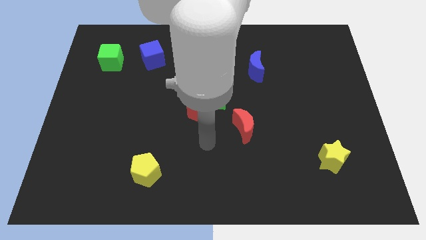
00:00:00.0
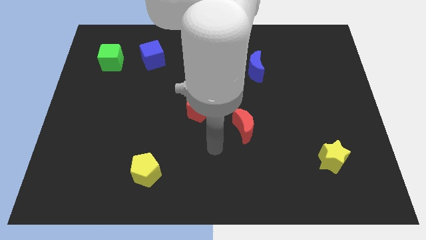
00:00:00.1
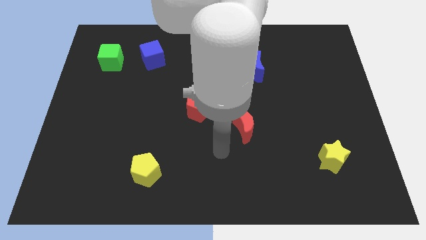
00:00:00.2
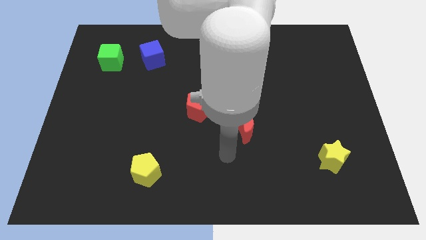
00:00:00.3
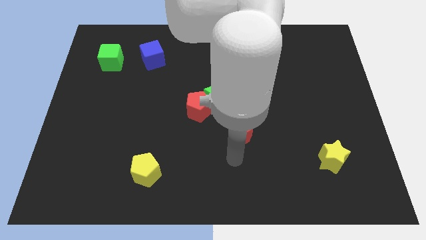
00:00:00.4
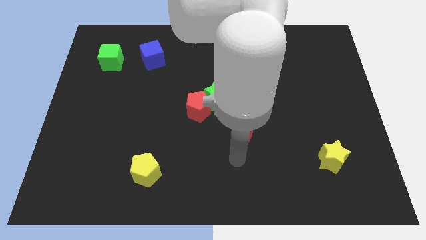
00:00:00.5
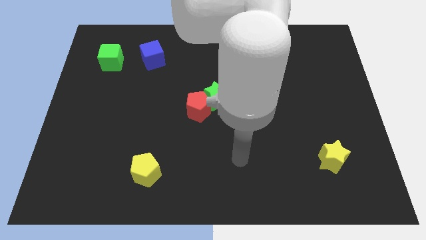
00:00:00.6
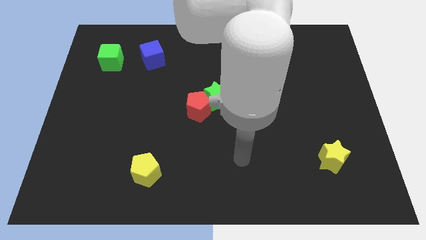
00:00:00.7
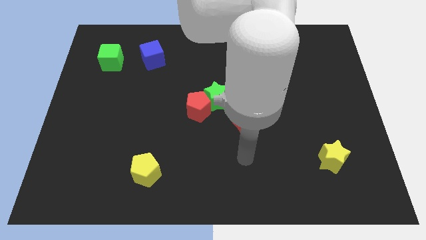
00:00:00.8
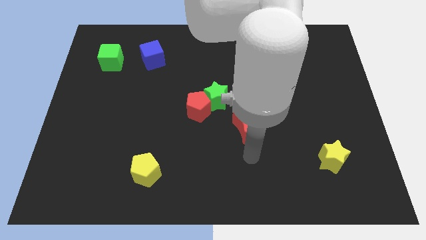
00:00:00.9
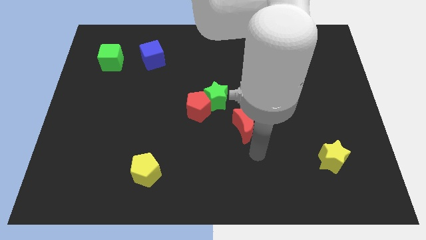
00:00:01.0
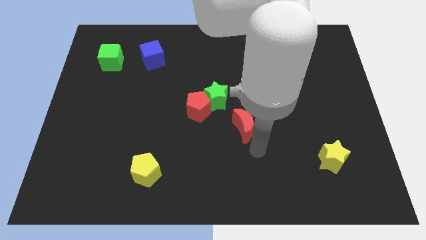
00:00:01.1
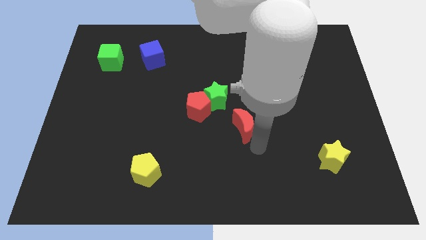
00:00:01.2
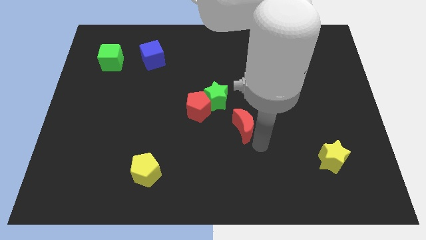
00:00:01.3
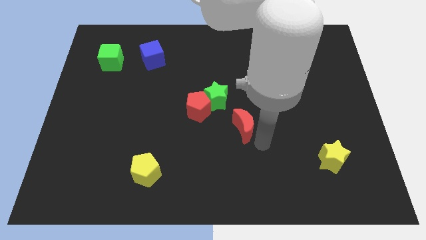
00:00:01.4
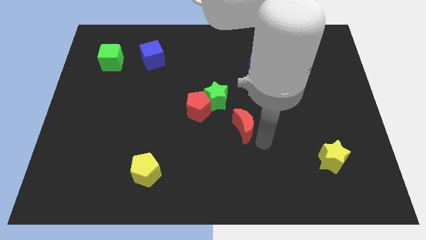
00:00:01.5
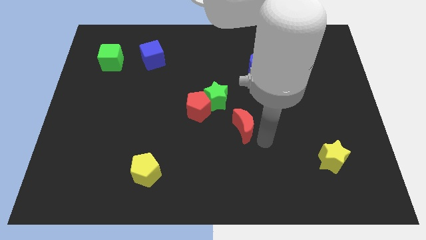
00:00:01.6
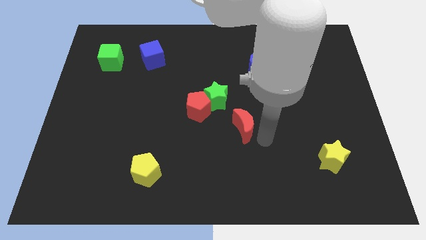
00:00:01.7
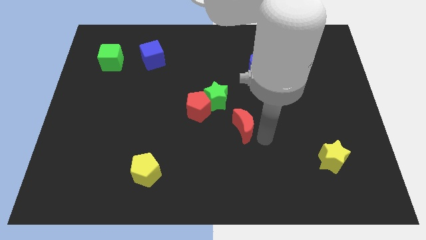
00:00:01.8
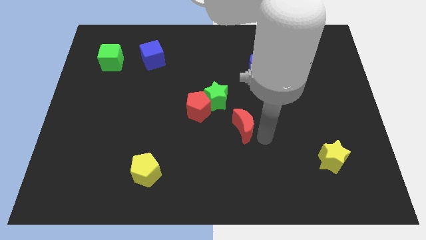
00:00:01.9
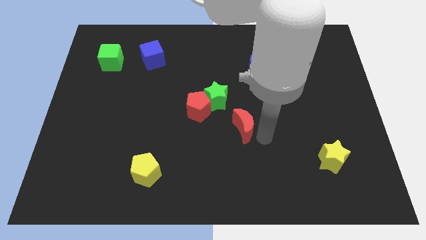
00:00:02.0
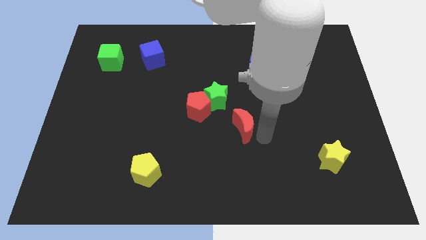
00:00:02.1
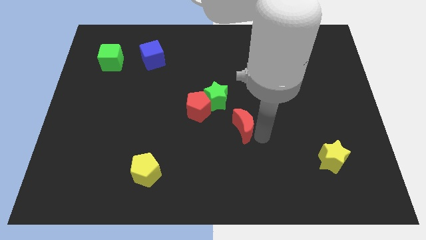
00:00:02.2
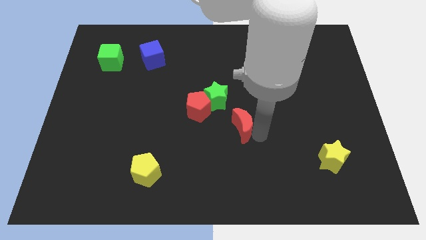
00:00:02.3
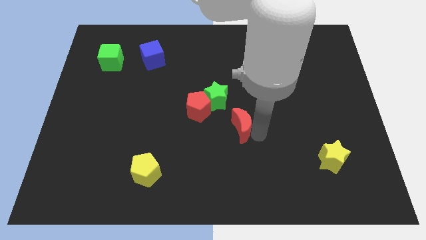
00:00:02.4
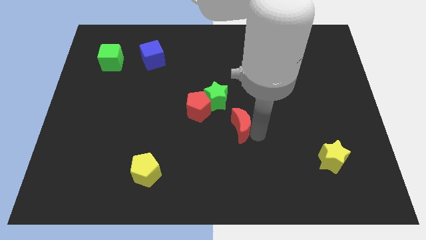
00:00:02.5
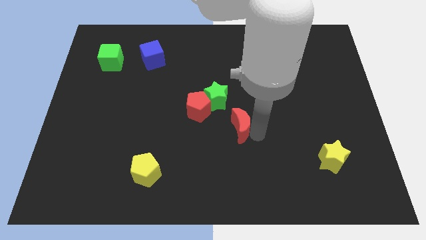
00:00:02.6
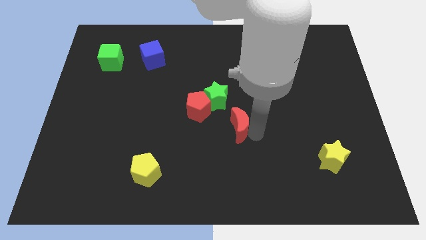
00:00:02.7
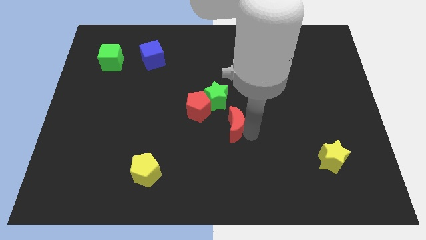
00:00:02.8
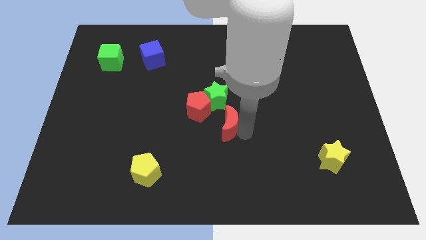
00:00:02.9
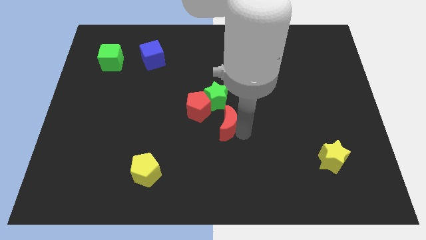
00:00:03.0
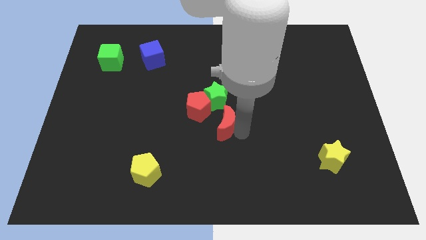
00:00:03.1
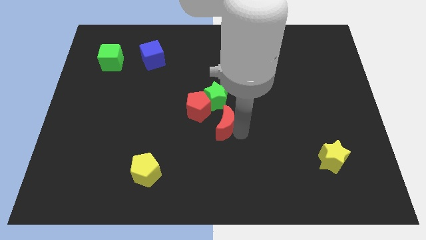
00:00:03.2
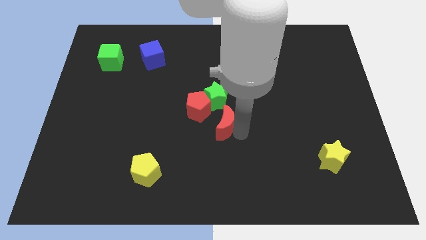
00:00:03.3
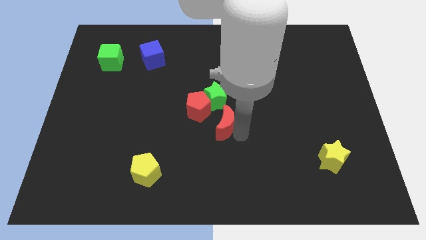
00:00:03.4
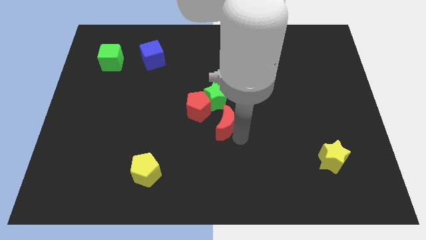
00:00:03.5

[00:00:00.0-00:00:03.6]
slightly move the red moon to the bottom right of the green star

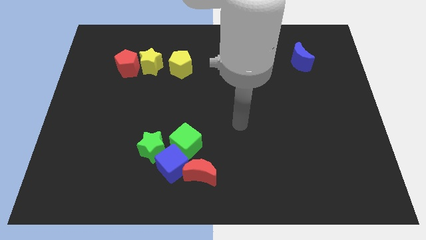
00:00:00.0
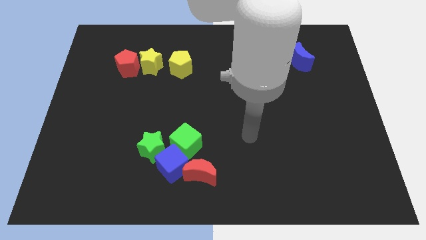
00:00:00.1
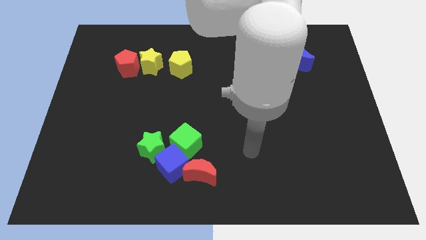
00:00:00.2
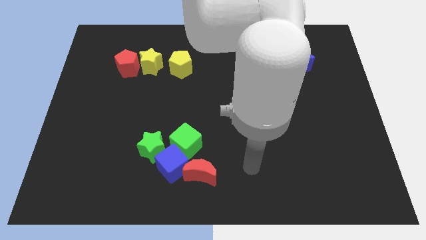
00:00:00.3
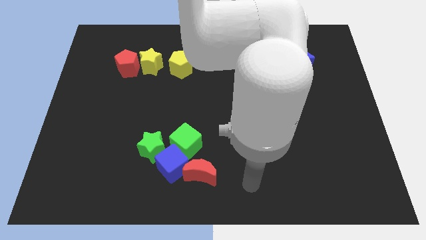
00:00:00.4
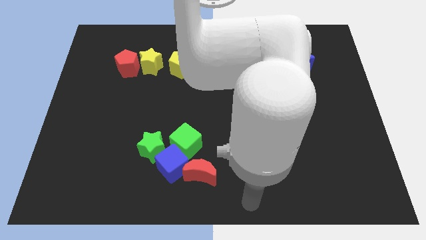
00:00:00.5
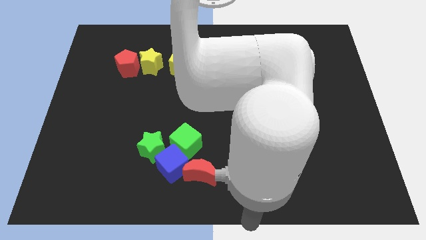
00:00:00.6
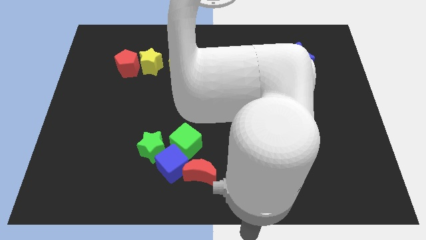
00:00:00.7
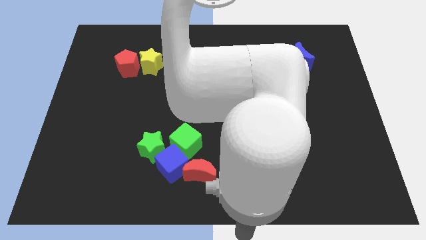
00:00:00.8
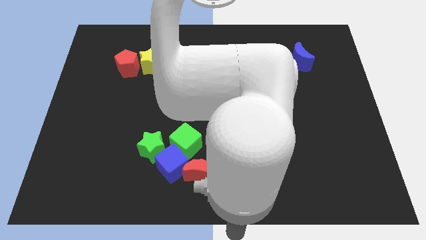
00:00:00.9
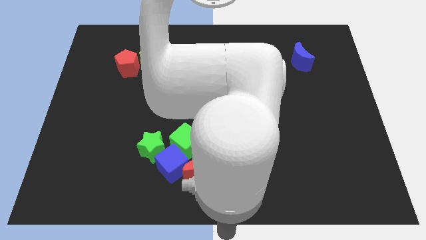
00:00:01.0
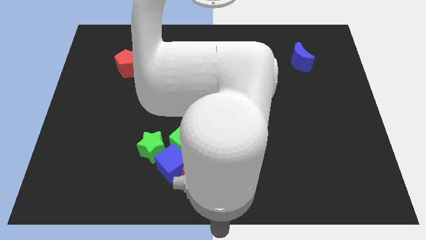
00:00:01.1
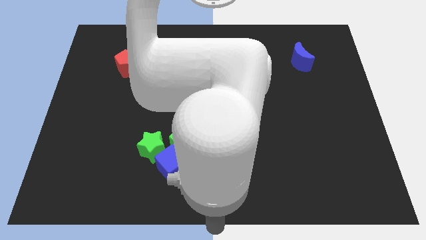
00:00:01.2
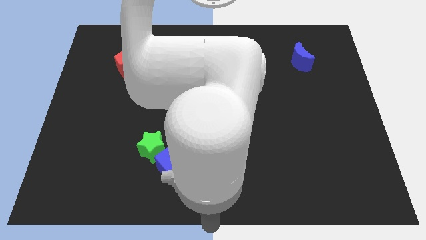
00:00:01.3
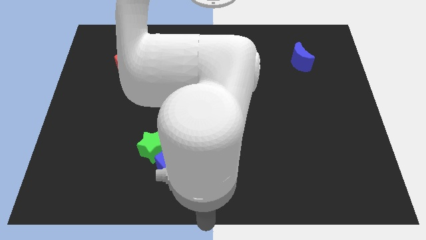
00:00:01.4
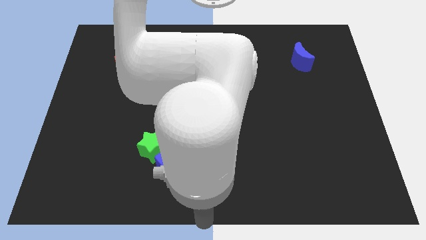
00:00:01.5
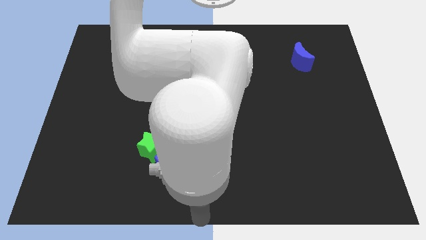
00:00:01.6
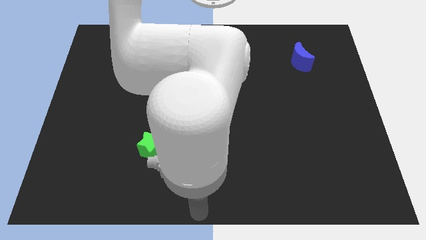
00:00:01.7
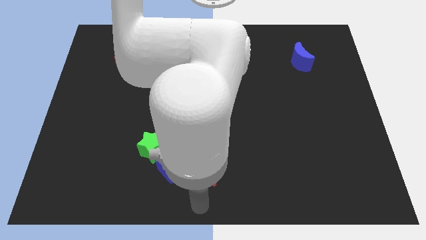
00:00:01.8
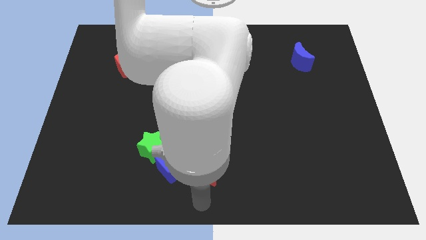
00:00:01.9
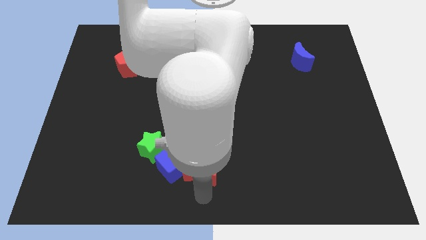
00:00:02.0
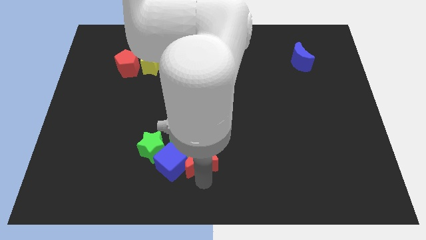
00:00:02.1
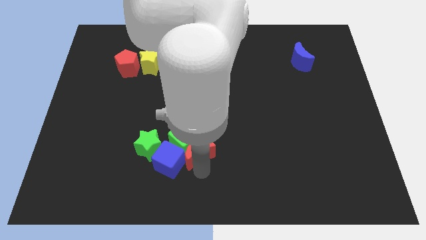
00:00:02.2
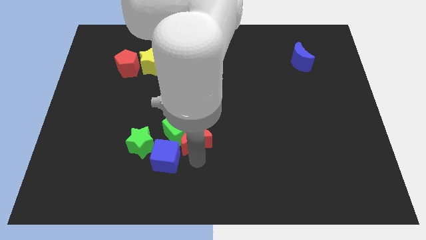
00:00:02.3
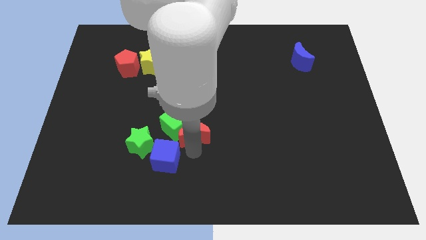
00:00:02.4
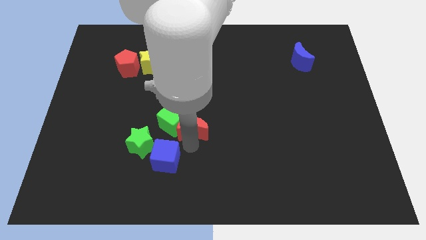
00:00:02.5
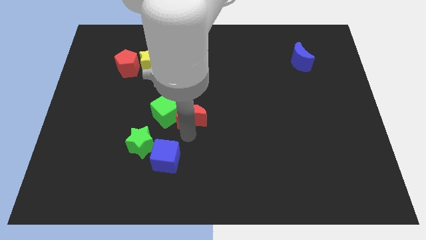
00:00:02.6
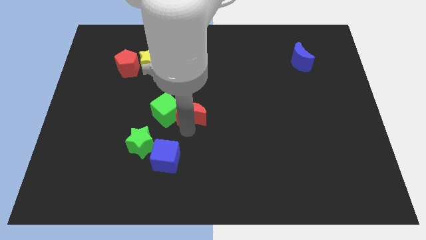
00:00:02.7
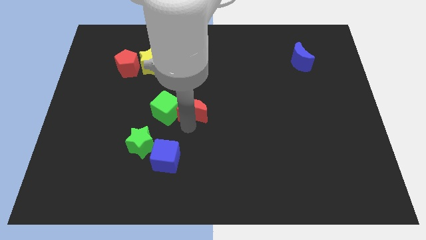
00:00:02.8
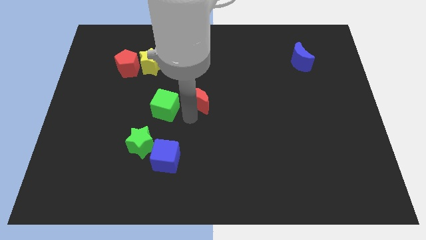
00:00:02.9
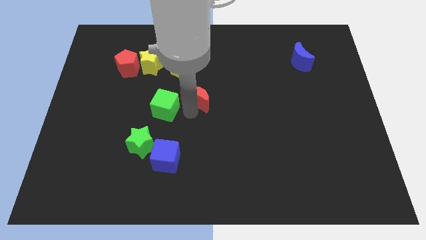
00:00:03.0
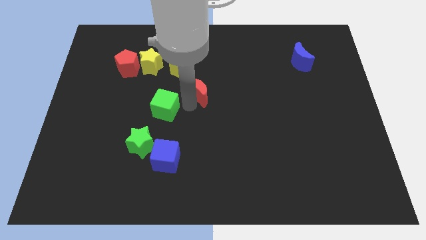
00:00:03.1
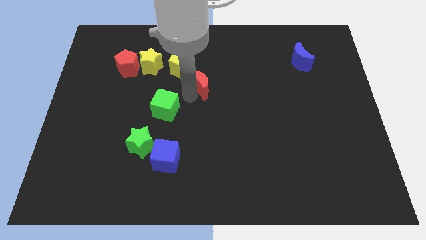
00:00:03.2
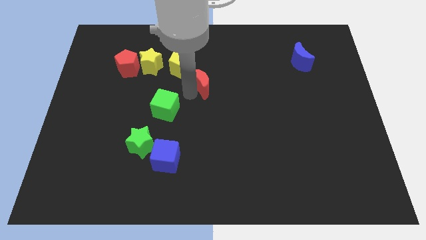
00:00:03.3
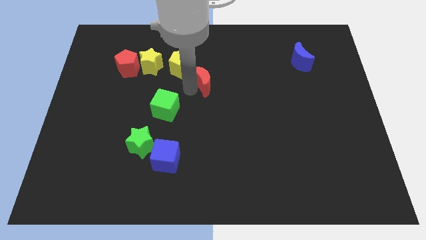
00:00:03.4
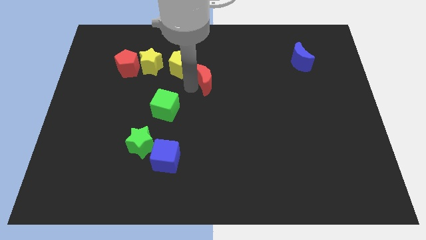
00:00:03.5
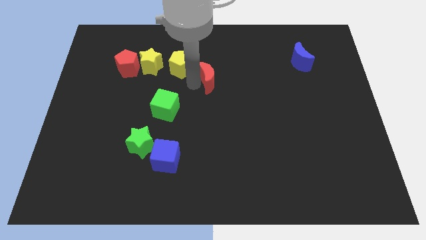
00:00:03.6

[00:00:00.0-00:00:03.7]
separate the red moon from the blue cube

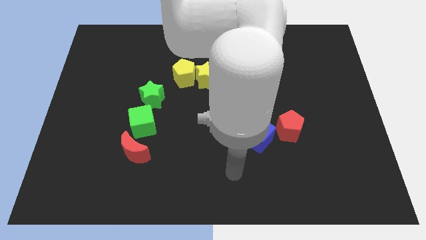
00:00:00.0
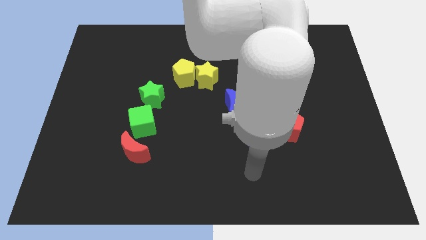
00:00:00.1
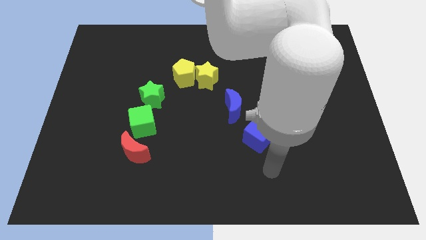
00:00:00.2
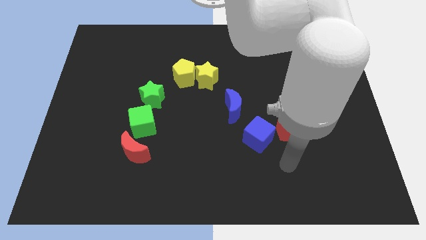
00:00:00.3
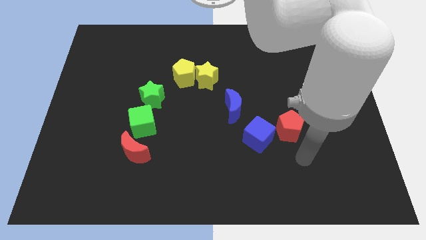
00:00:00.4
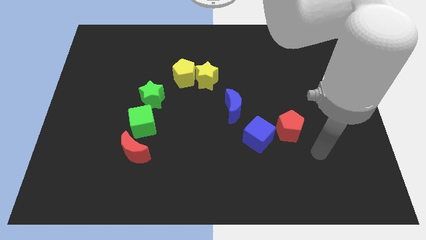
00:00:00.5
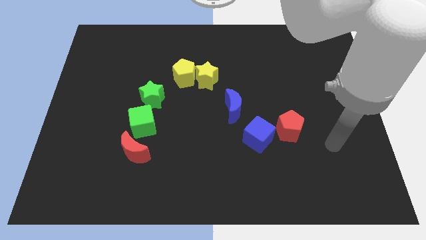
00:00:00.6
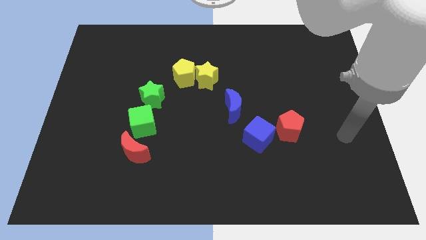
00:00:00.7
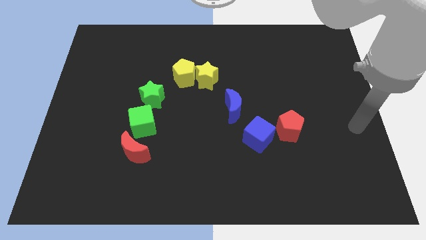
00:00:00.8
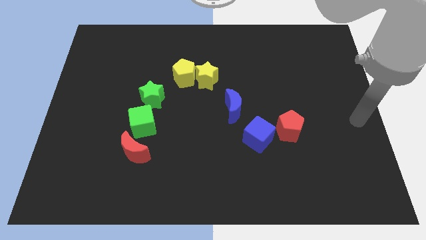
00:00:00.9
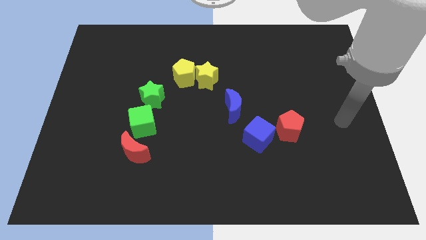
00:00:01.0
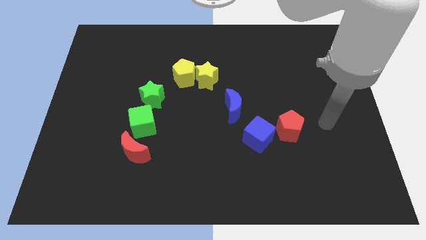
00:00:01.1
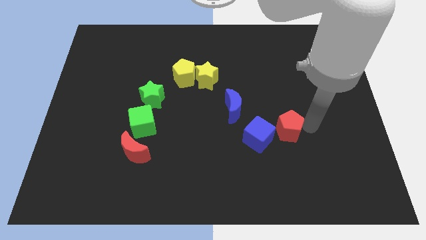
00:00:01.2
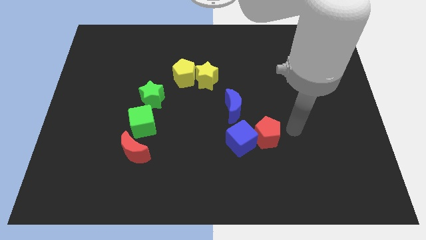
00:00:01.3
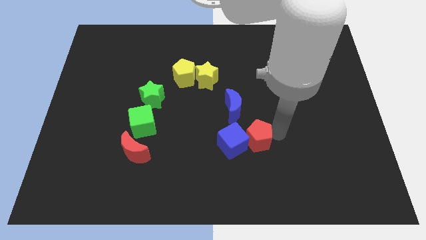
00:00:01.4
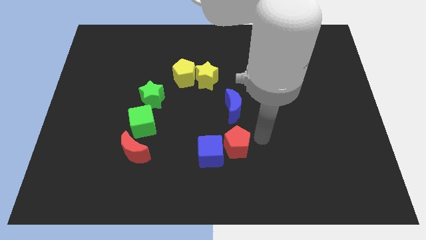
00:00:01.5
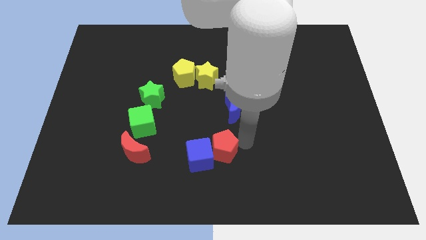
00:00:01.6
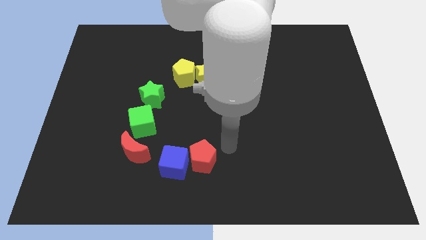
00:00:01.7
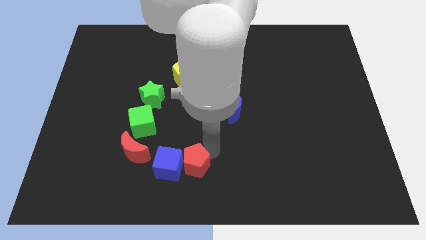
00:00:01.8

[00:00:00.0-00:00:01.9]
push the red pentagon along with the blue cube towards the bottom left
